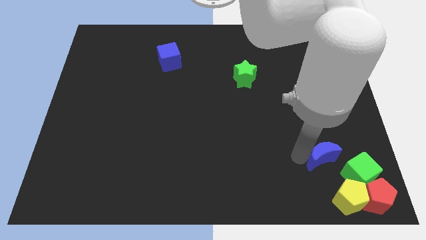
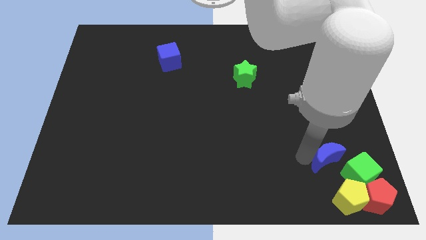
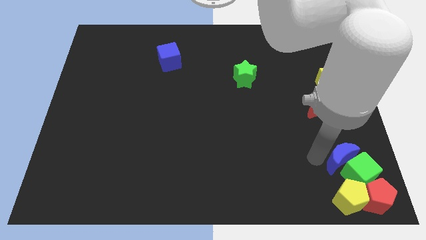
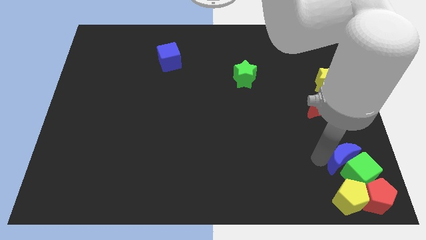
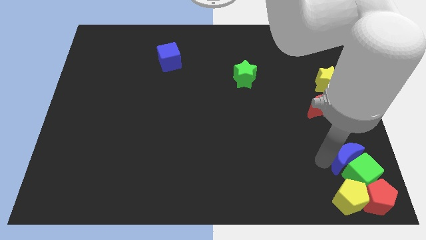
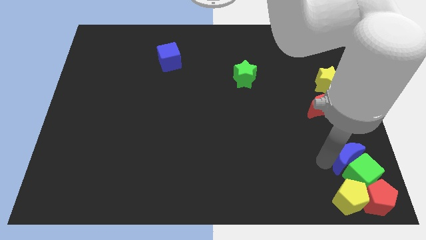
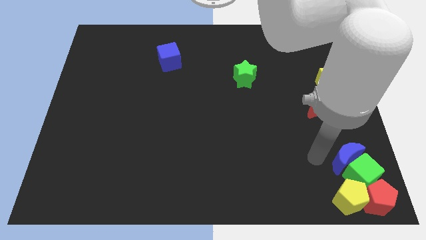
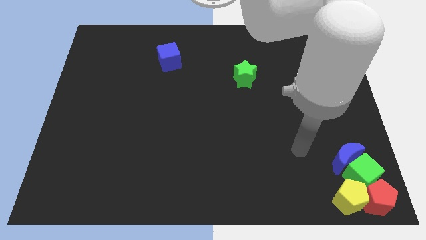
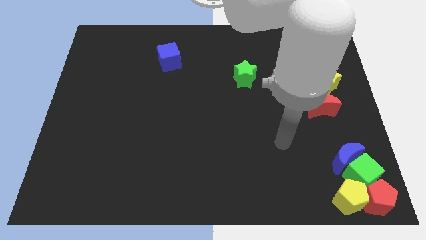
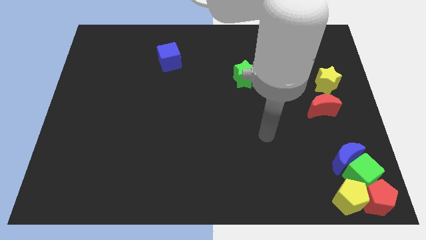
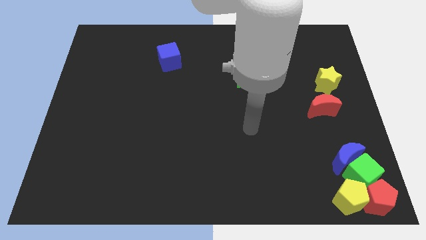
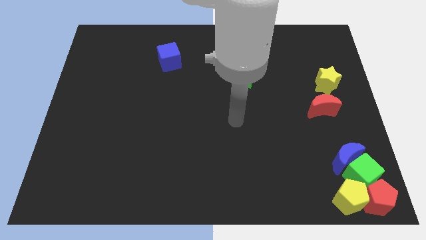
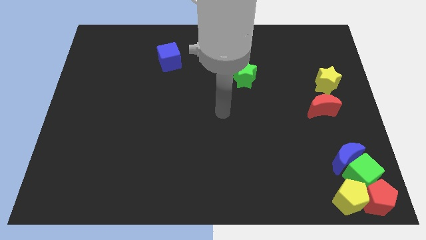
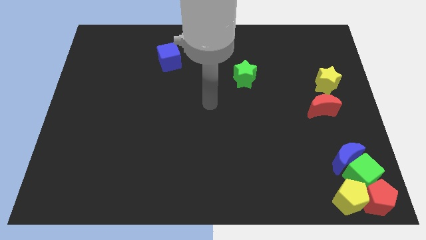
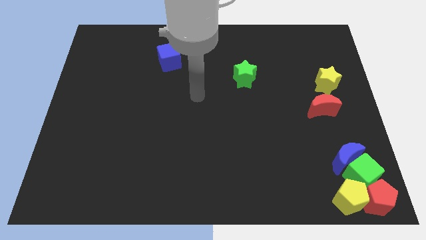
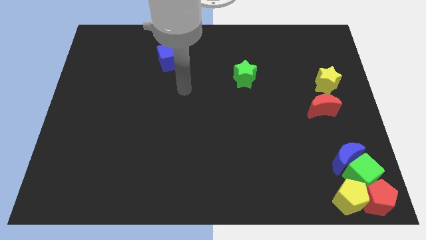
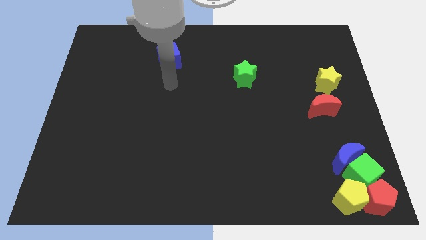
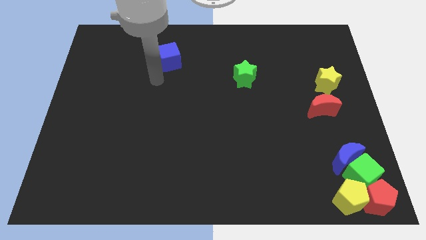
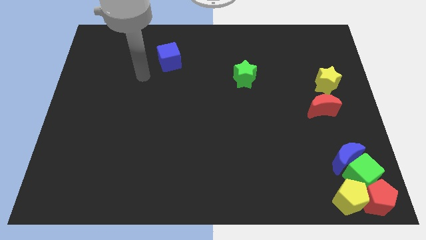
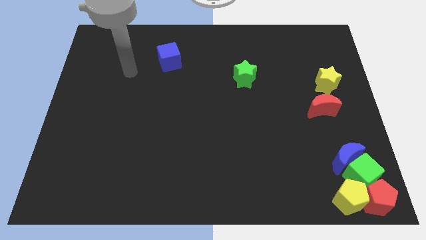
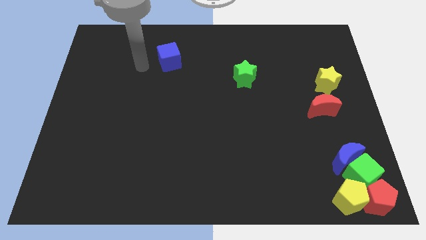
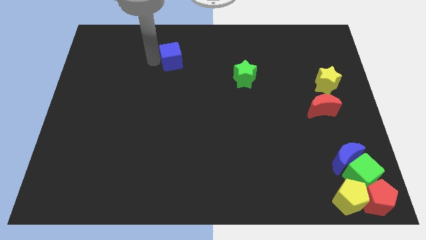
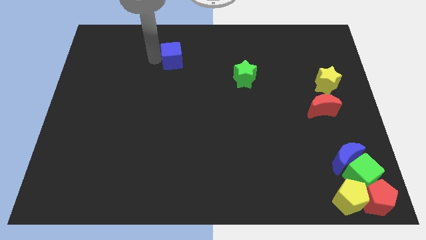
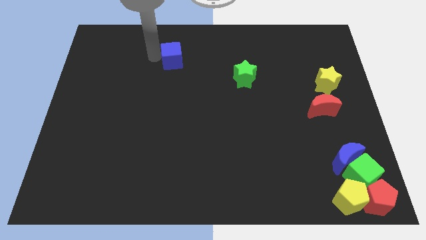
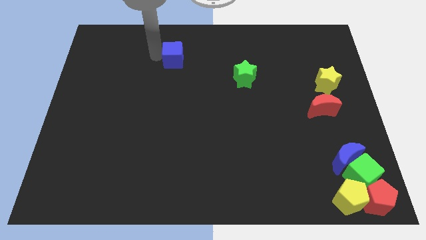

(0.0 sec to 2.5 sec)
move your arm away form the blue crescent

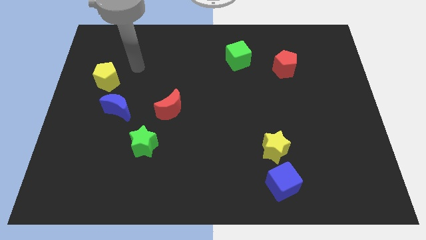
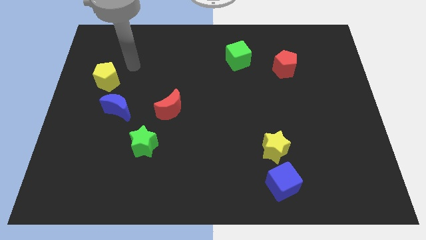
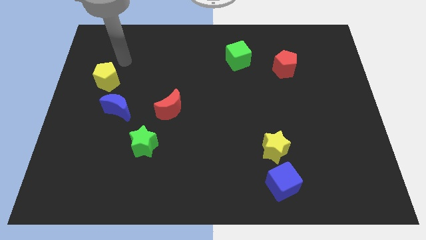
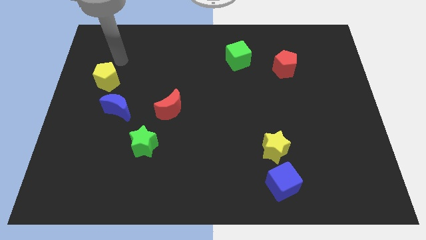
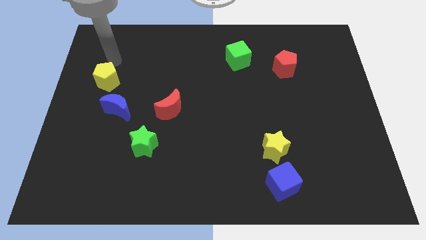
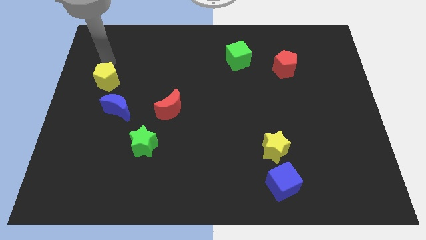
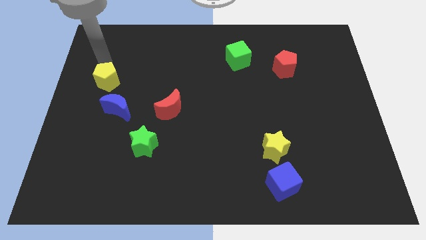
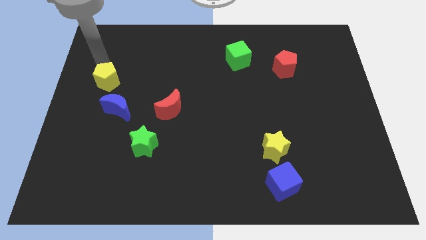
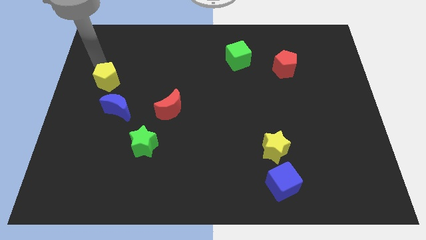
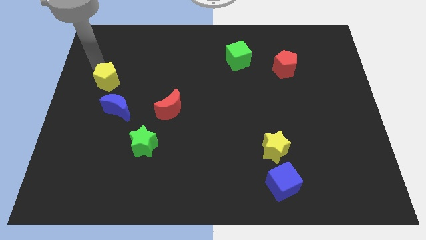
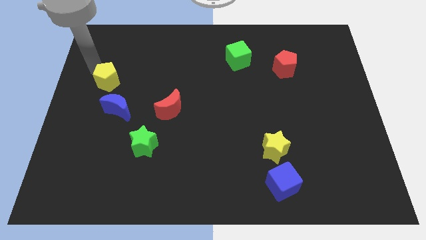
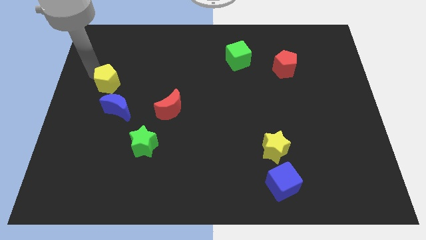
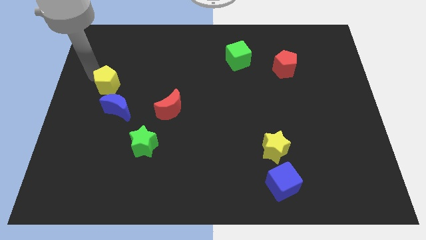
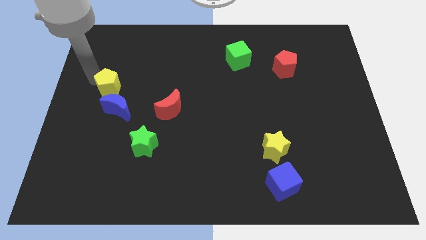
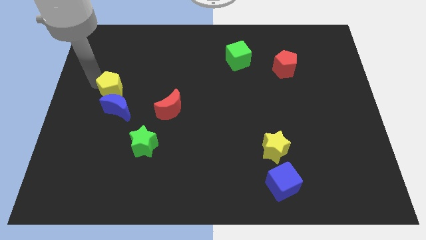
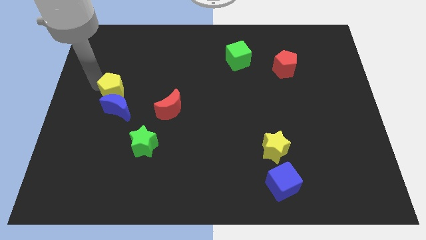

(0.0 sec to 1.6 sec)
move your arm towards the yellow pentagon

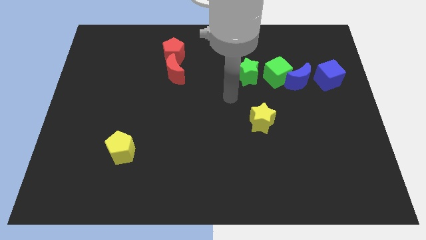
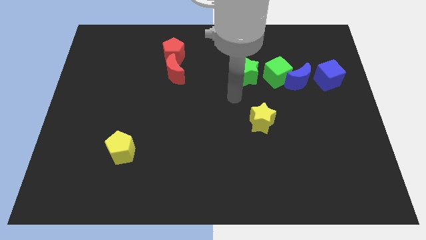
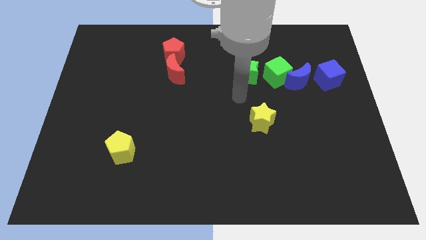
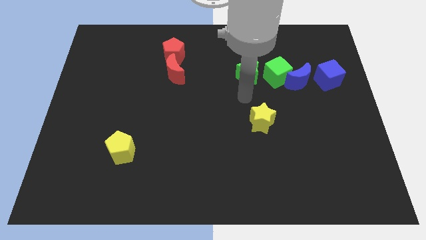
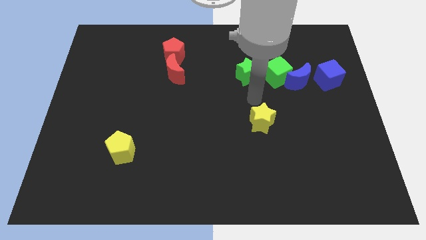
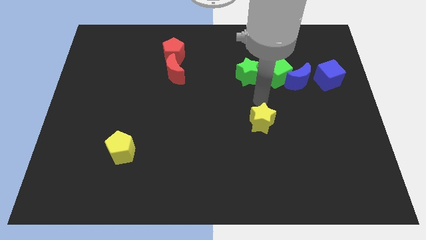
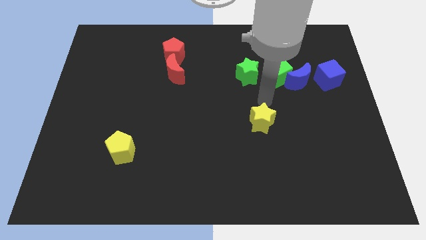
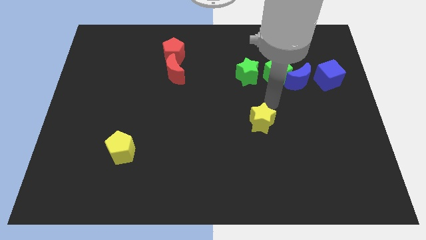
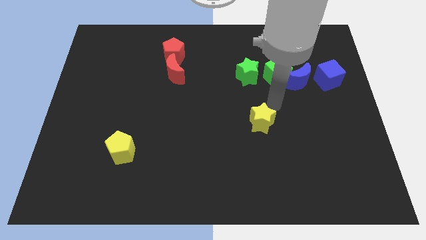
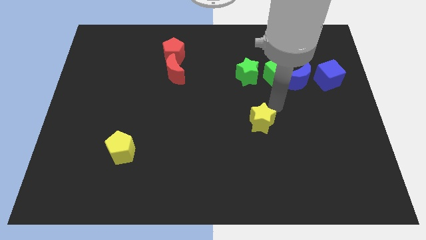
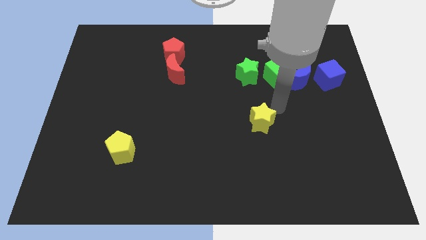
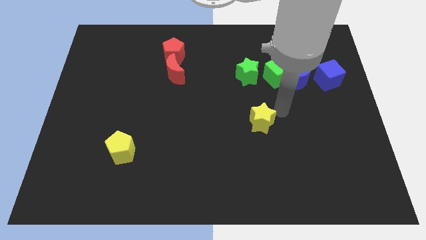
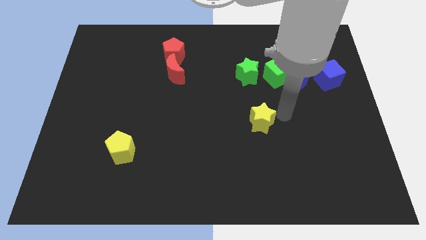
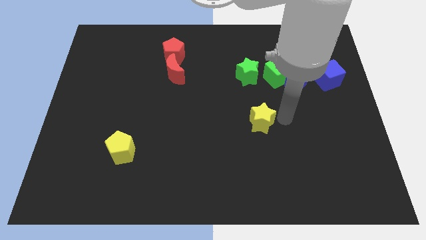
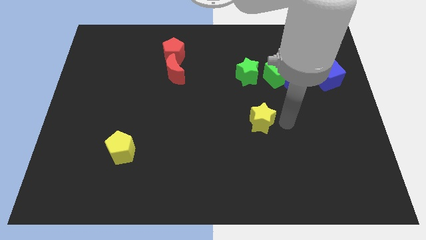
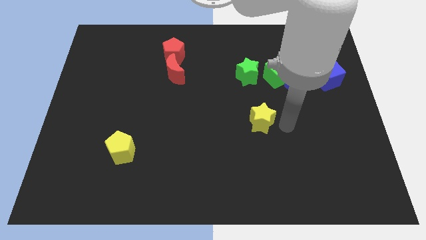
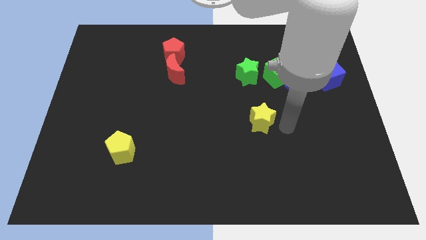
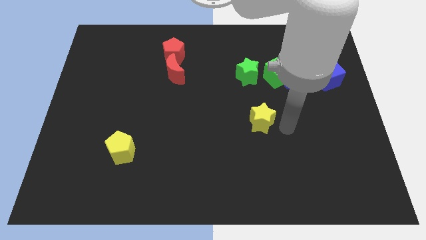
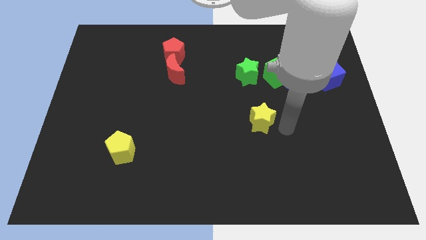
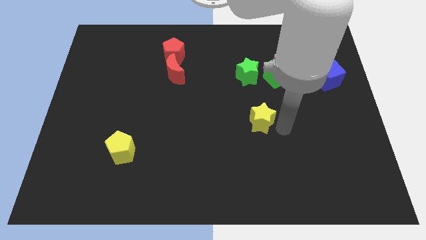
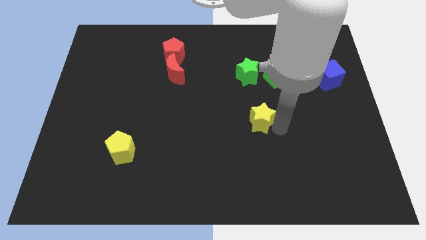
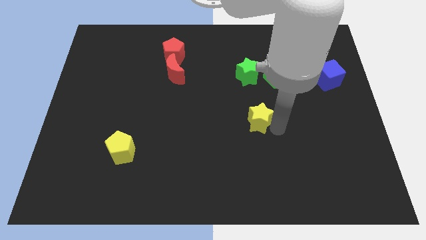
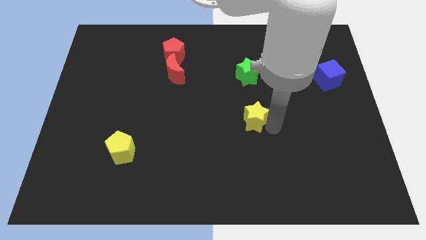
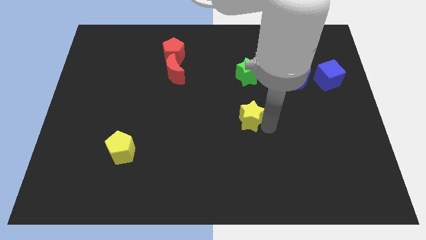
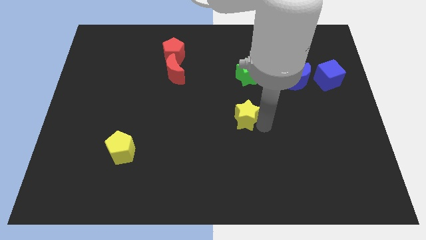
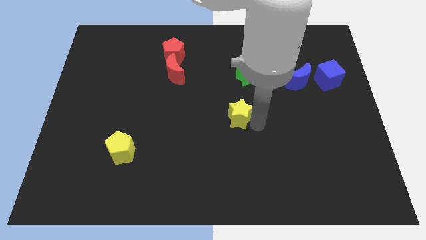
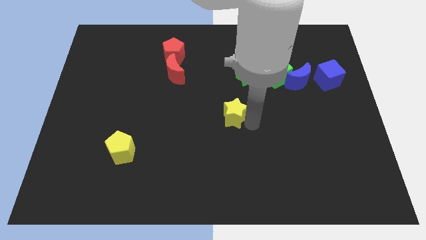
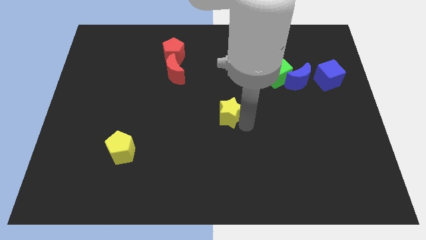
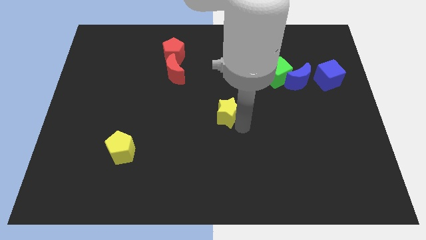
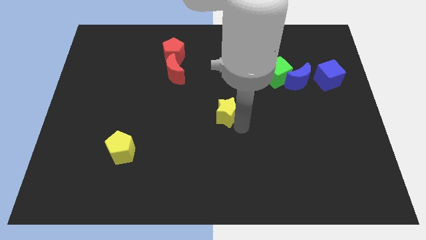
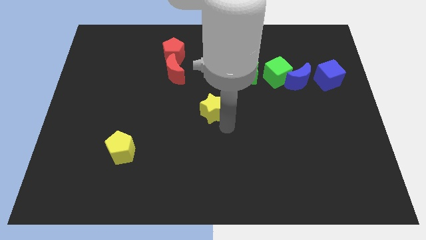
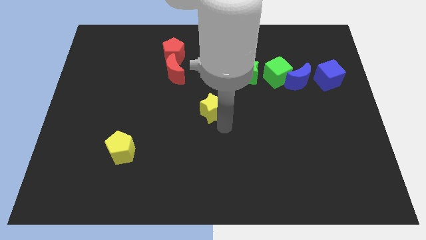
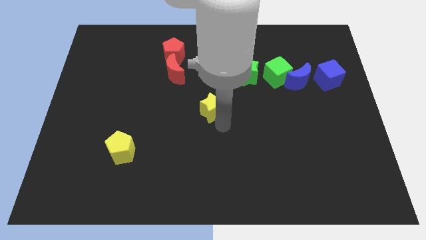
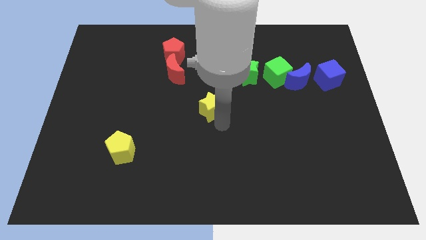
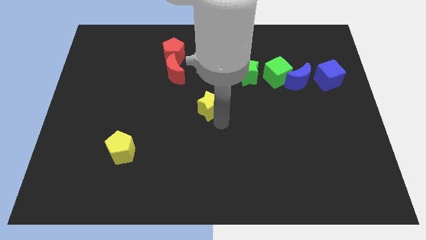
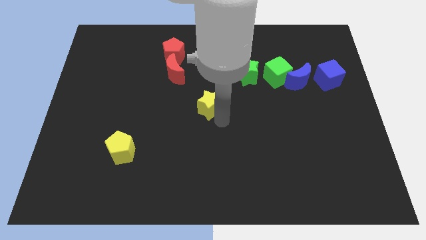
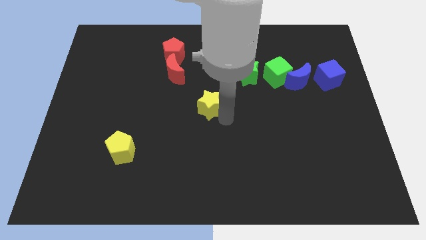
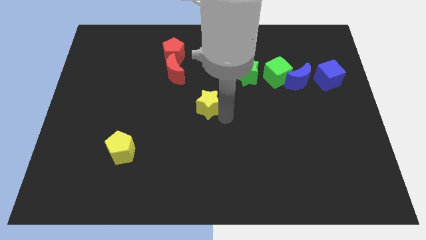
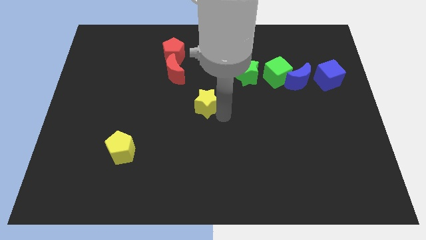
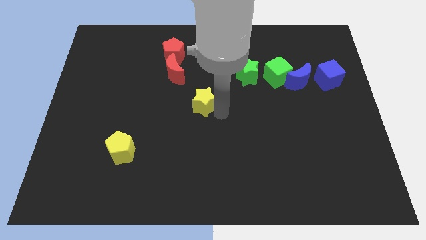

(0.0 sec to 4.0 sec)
move the yellow star towards the red blocks

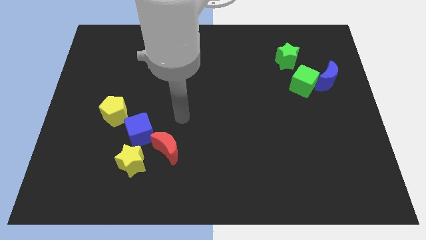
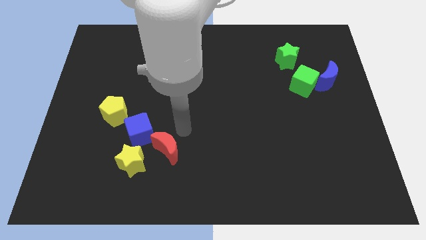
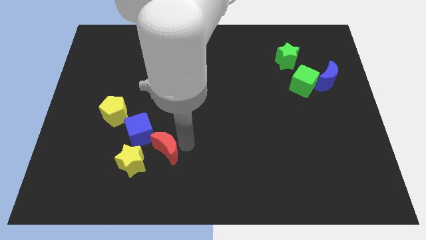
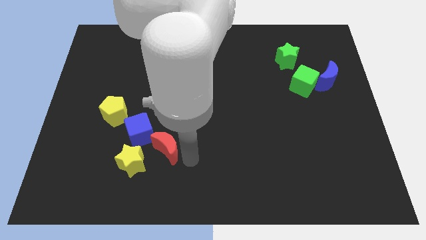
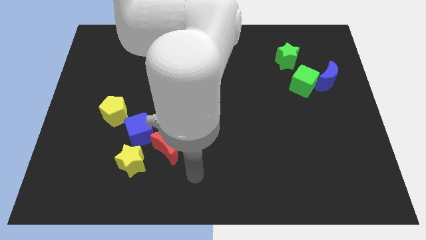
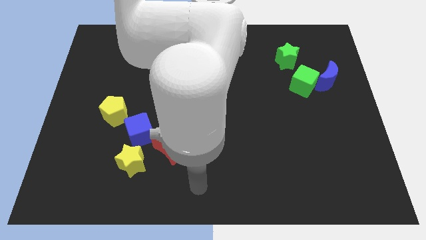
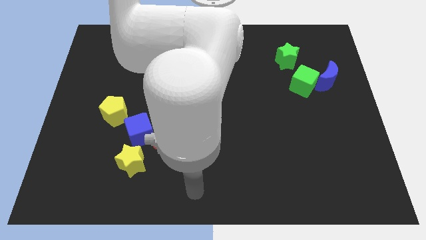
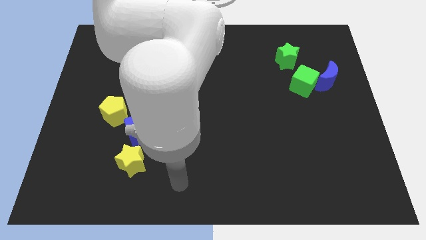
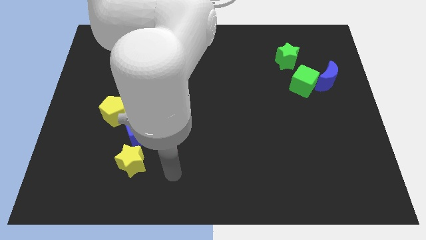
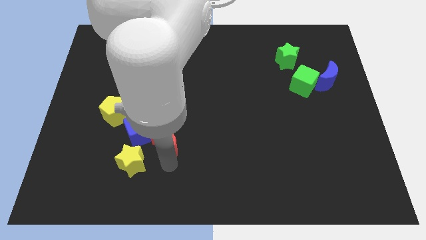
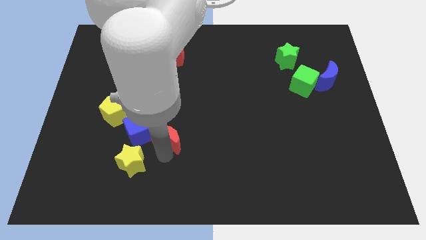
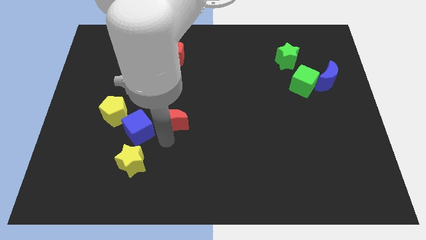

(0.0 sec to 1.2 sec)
move the red moon slightly up
